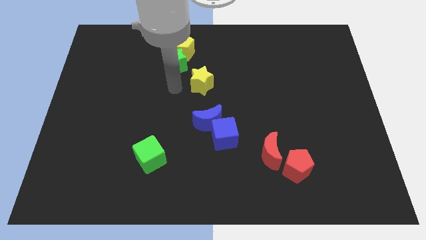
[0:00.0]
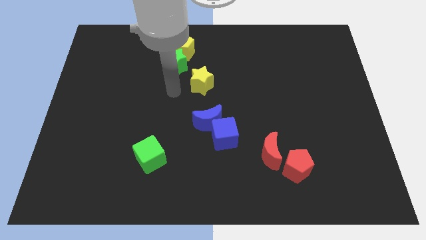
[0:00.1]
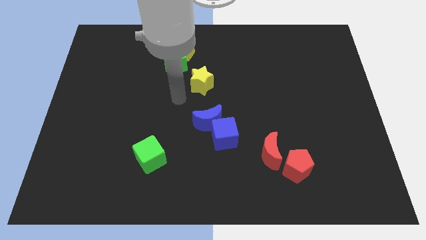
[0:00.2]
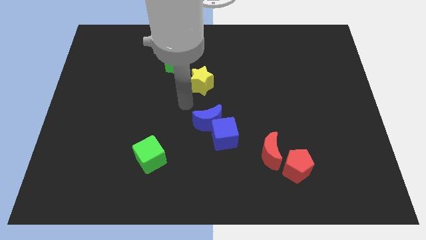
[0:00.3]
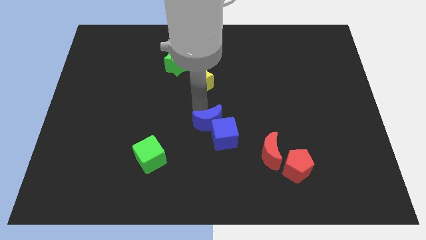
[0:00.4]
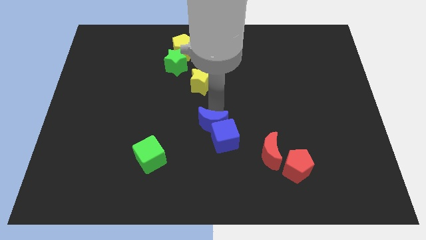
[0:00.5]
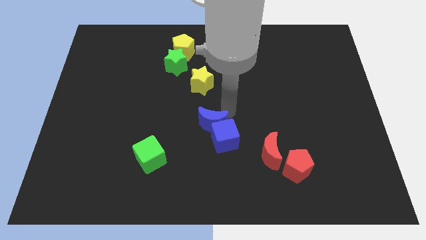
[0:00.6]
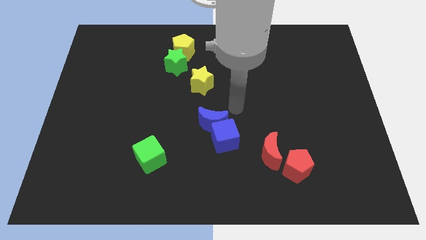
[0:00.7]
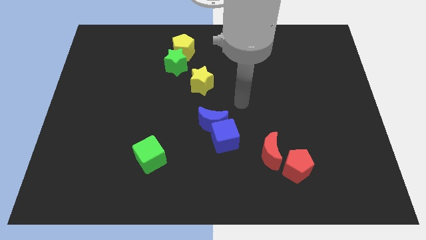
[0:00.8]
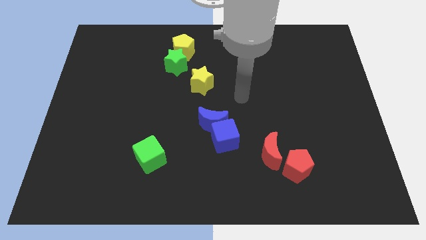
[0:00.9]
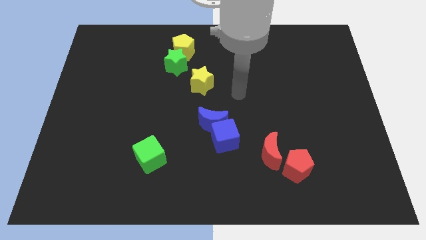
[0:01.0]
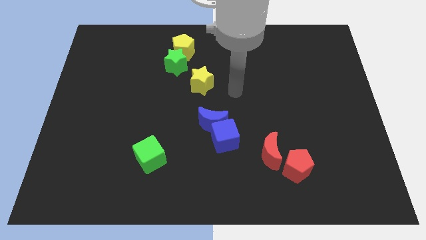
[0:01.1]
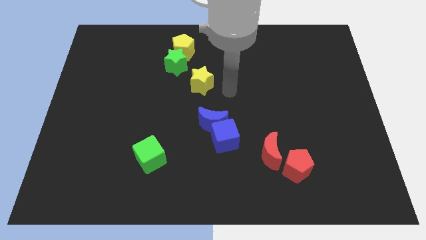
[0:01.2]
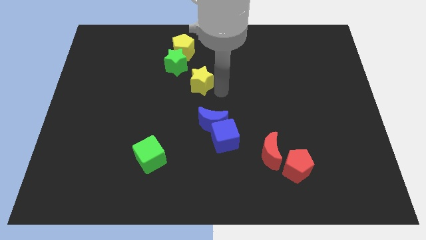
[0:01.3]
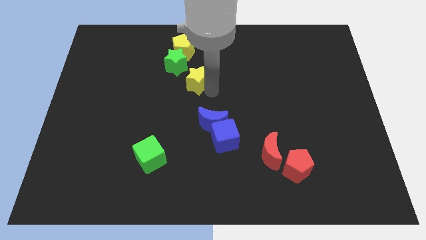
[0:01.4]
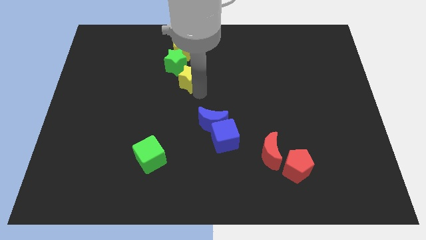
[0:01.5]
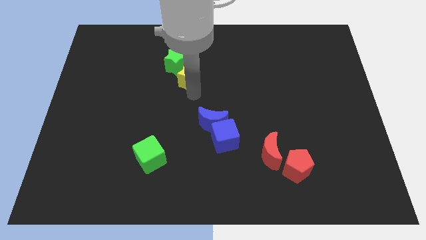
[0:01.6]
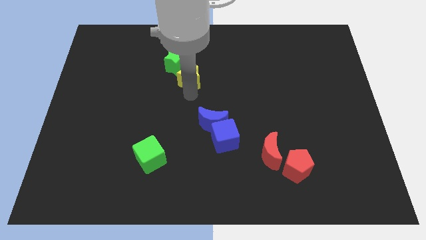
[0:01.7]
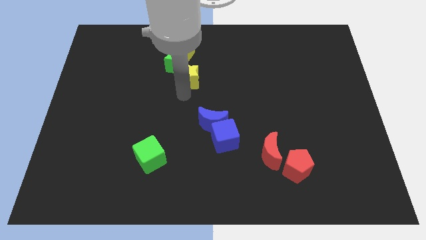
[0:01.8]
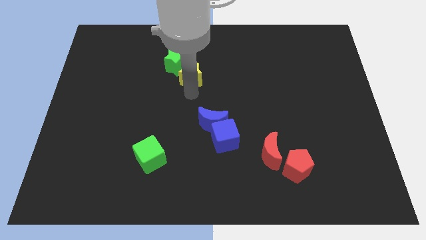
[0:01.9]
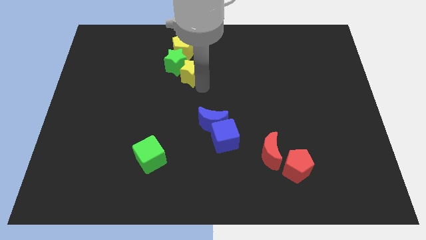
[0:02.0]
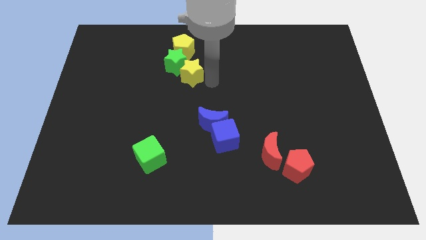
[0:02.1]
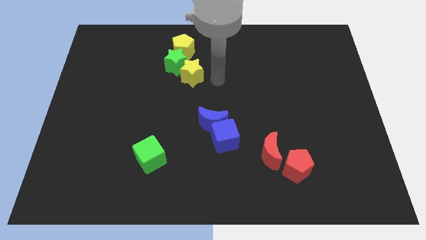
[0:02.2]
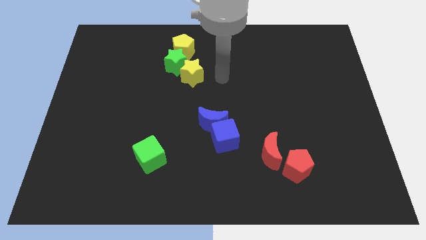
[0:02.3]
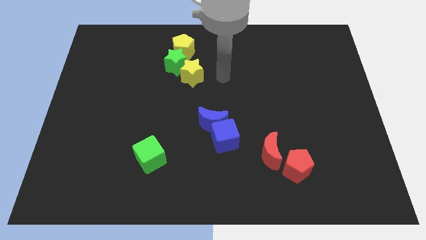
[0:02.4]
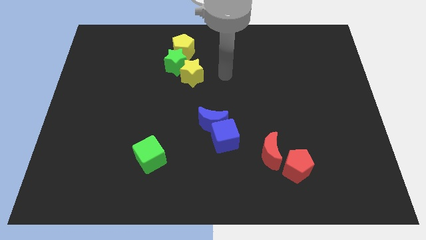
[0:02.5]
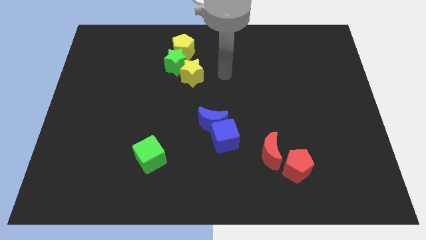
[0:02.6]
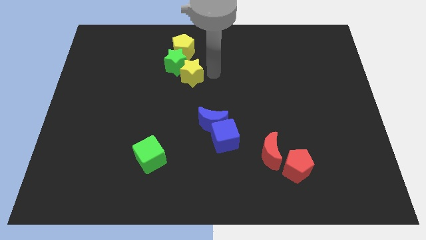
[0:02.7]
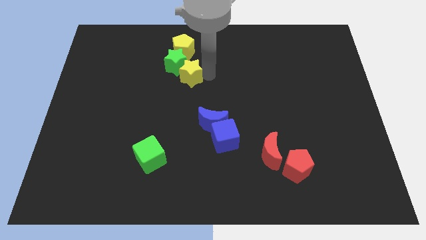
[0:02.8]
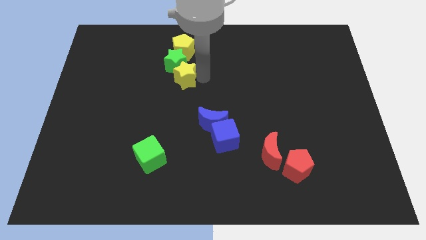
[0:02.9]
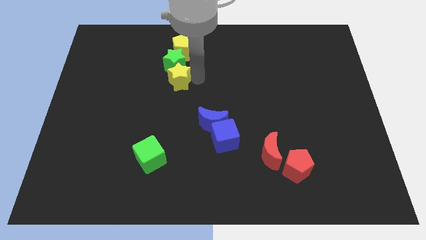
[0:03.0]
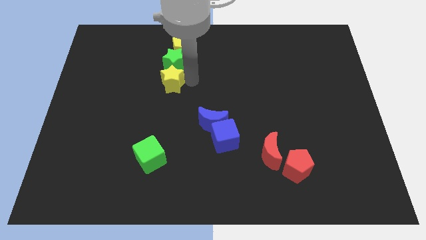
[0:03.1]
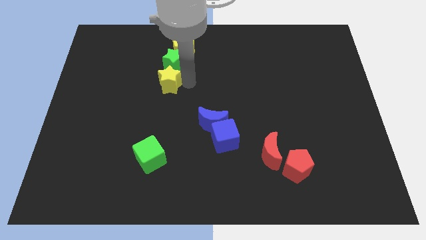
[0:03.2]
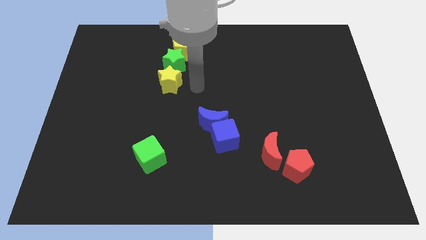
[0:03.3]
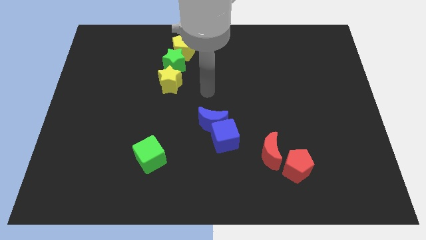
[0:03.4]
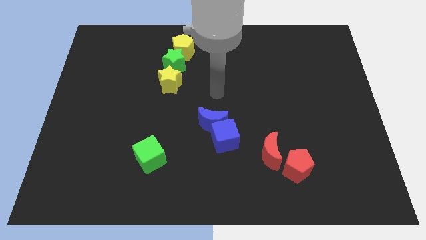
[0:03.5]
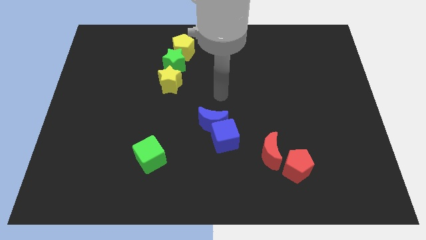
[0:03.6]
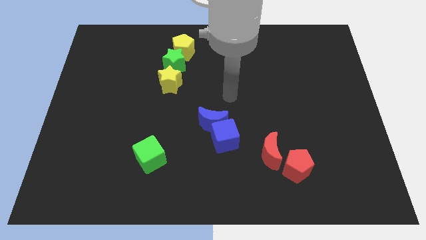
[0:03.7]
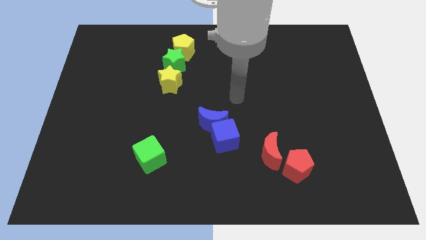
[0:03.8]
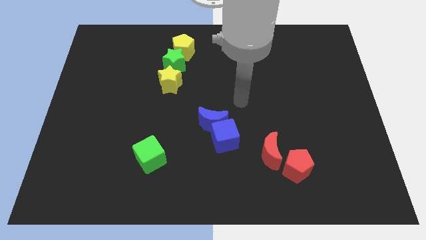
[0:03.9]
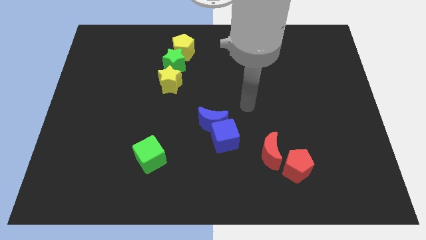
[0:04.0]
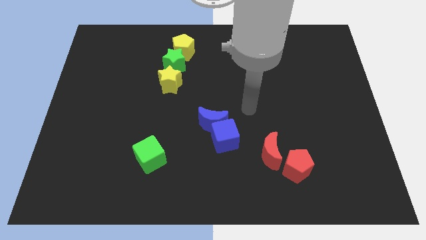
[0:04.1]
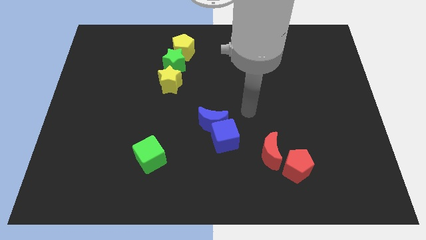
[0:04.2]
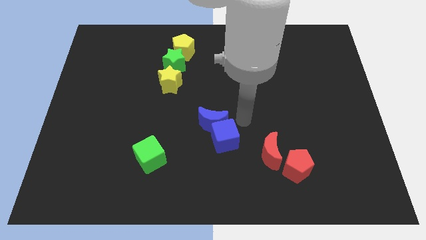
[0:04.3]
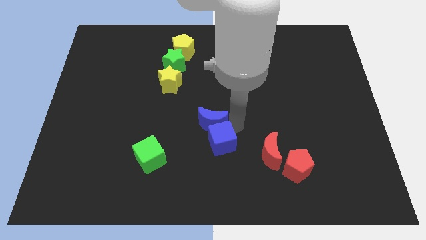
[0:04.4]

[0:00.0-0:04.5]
move the yellow star towards the bottom of the green star

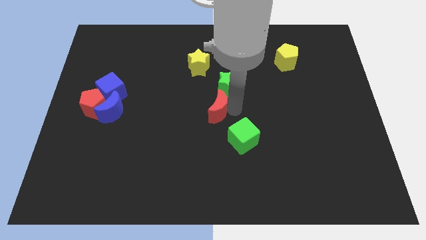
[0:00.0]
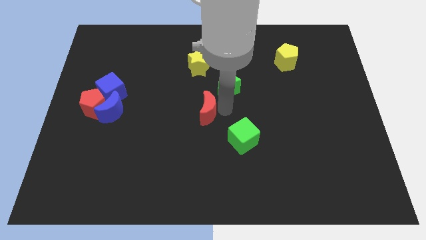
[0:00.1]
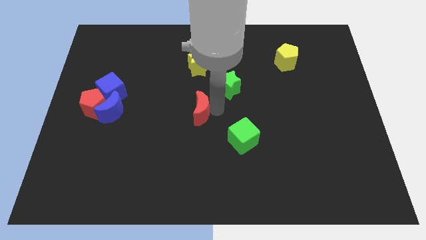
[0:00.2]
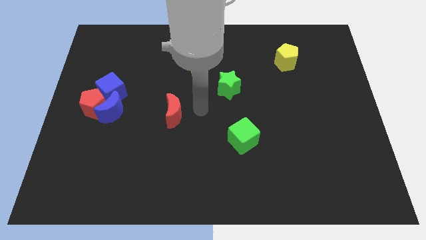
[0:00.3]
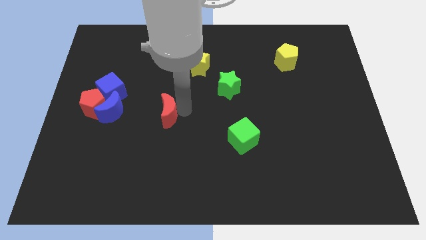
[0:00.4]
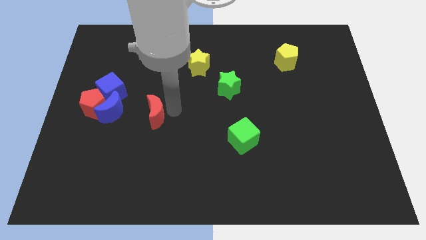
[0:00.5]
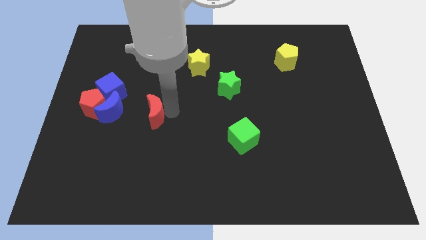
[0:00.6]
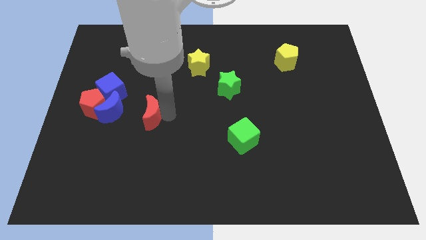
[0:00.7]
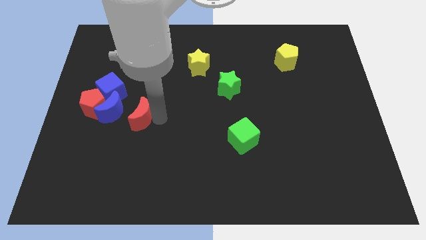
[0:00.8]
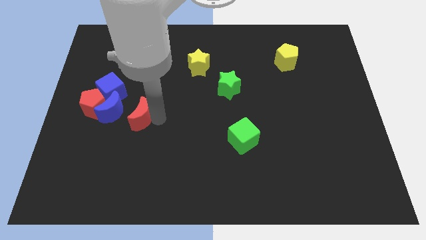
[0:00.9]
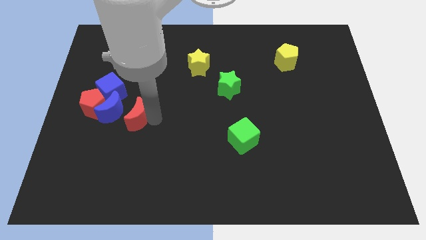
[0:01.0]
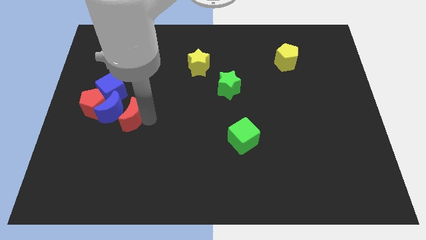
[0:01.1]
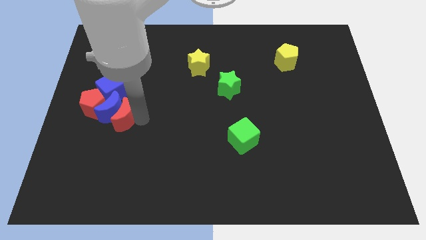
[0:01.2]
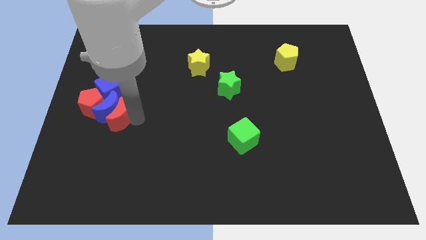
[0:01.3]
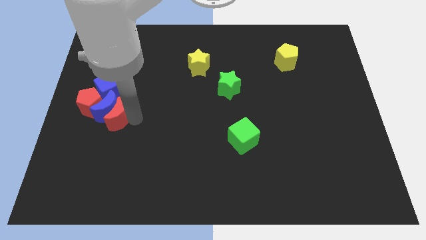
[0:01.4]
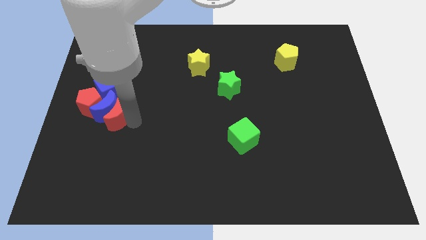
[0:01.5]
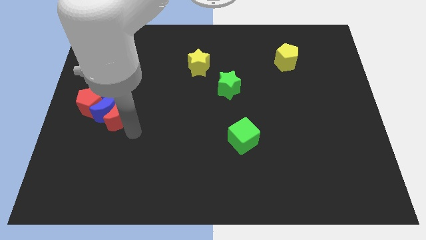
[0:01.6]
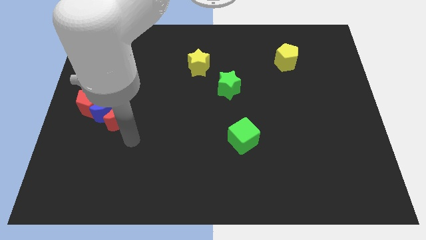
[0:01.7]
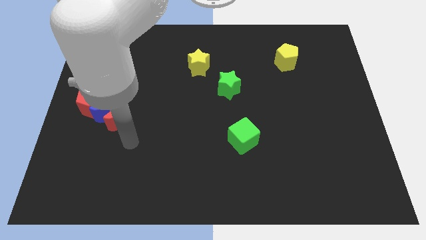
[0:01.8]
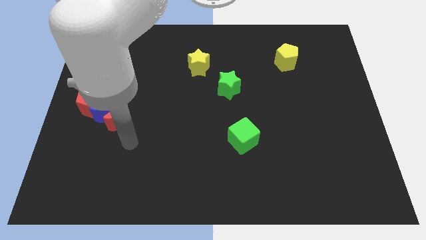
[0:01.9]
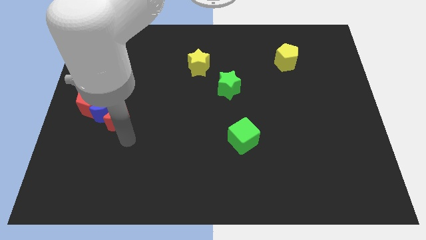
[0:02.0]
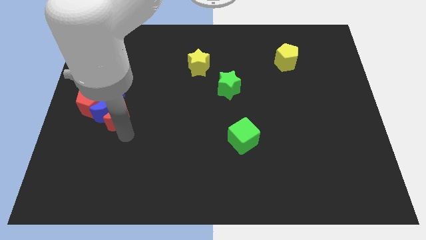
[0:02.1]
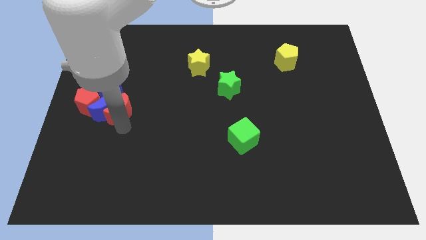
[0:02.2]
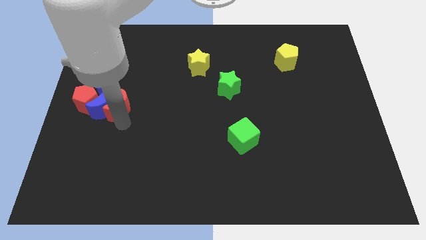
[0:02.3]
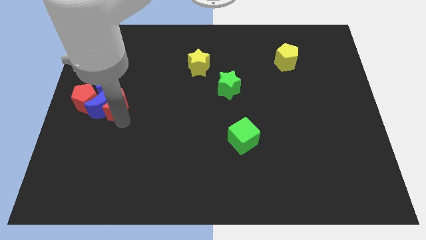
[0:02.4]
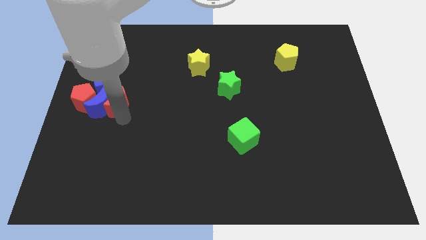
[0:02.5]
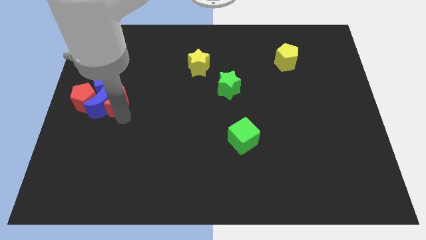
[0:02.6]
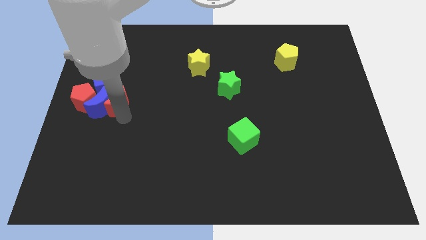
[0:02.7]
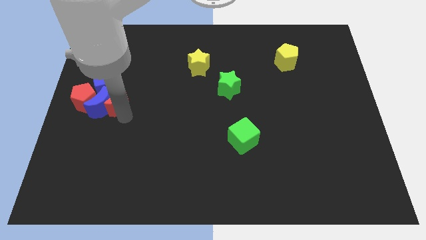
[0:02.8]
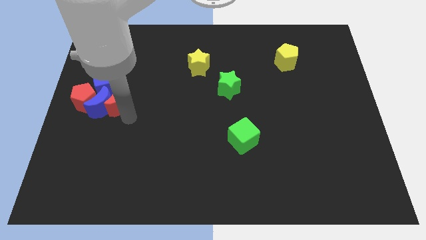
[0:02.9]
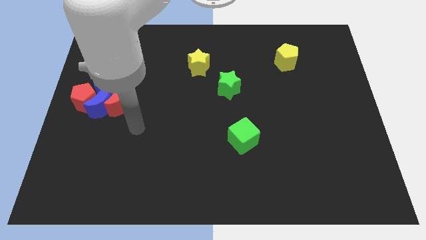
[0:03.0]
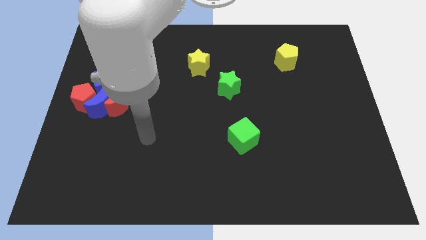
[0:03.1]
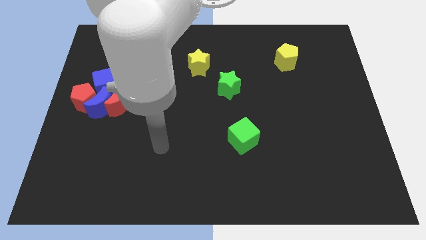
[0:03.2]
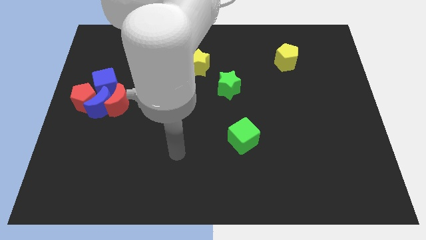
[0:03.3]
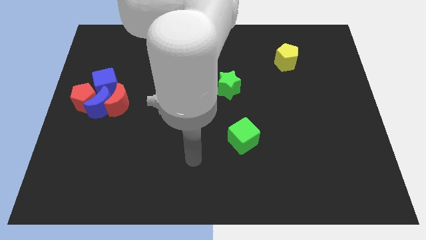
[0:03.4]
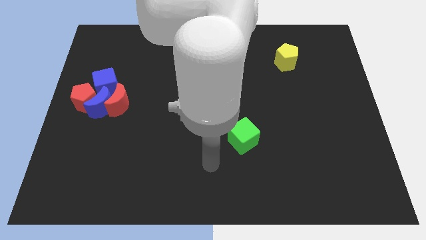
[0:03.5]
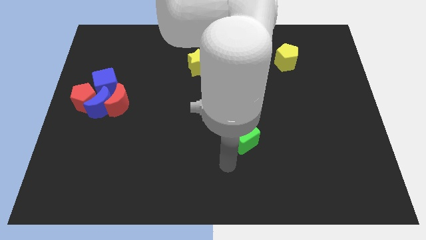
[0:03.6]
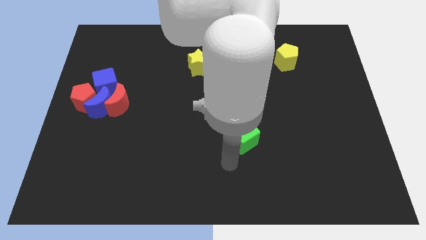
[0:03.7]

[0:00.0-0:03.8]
push the red crescent into the blue moon

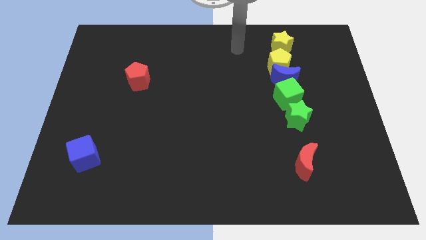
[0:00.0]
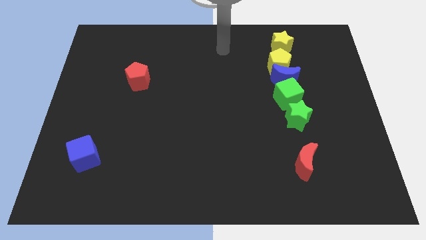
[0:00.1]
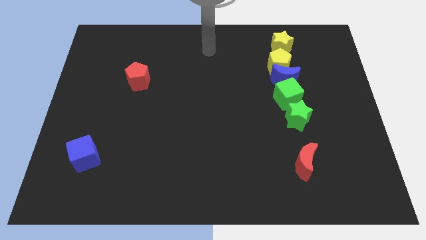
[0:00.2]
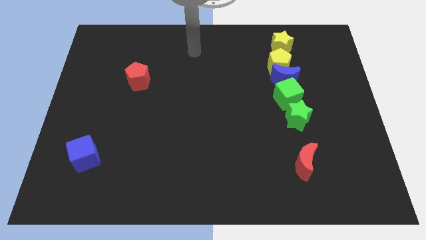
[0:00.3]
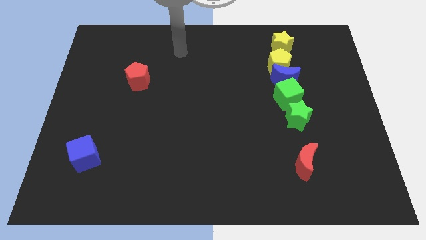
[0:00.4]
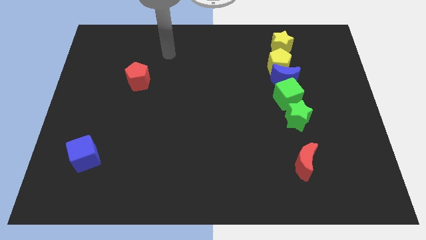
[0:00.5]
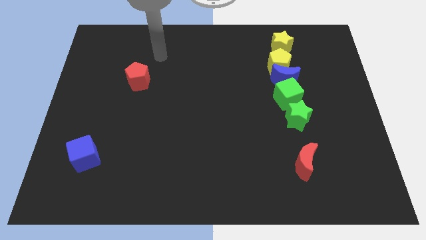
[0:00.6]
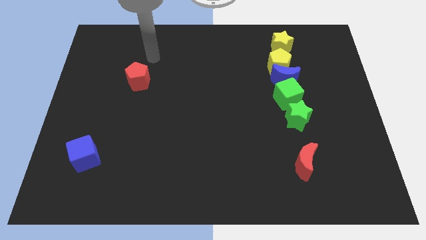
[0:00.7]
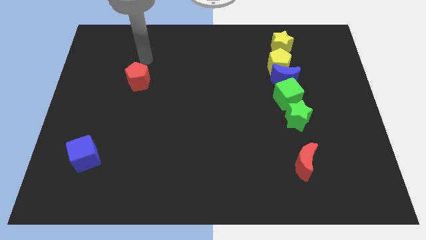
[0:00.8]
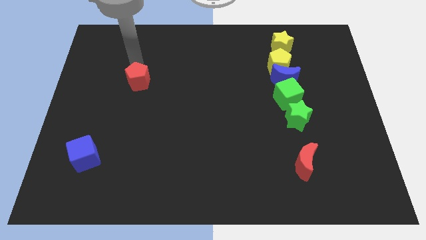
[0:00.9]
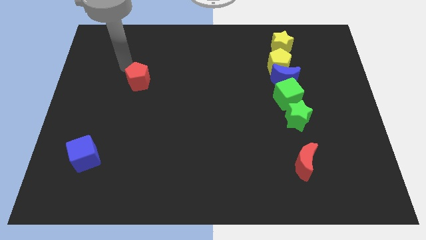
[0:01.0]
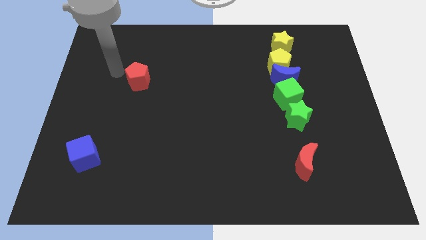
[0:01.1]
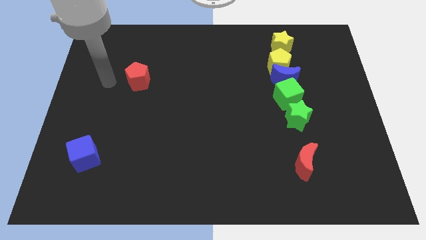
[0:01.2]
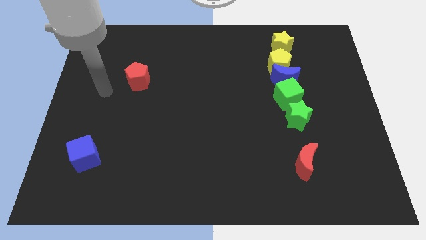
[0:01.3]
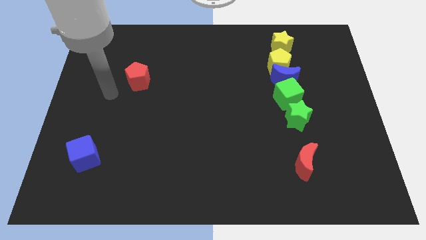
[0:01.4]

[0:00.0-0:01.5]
move the arm towards the red pentagon
